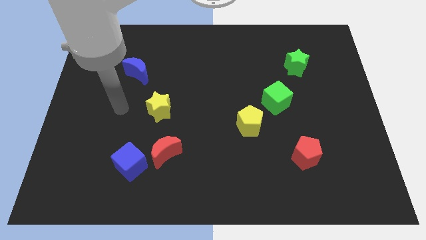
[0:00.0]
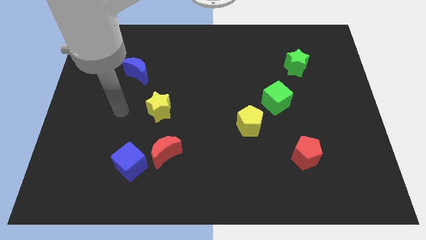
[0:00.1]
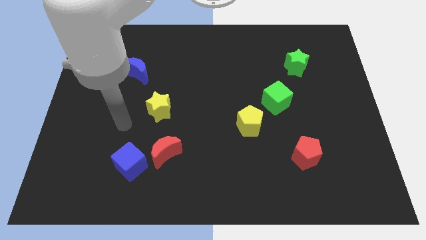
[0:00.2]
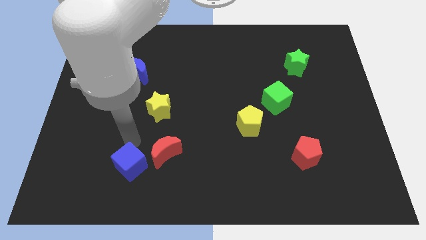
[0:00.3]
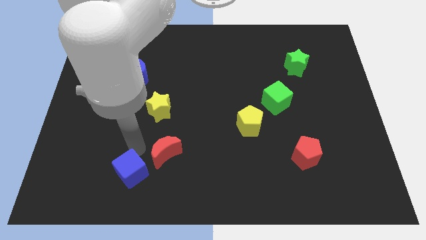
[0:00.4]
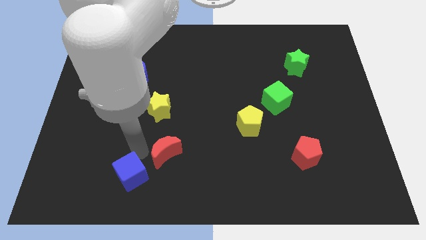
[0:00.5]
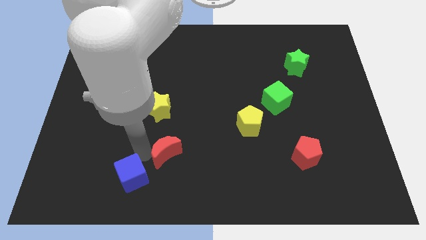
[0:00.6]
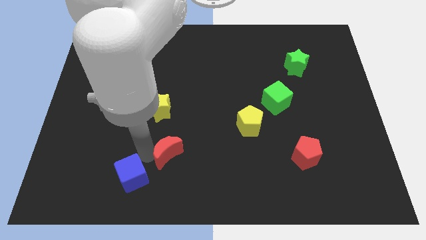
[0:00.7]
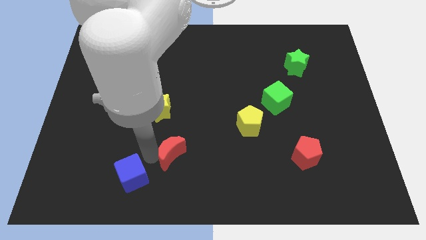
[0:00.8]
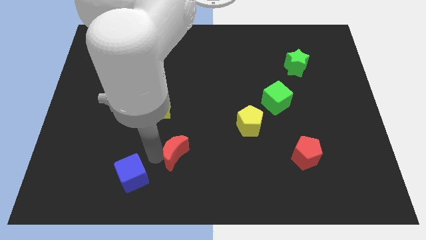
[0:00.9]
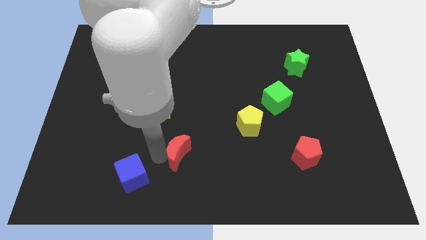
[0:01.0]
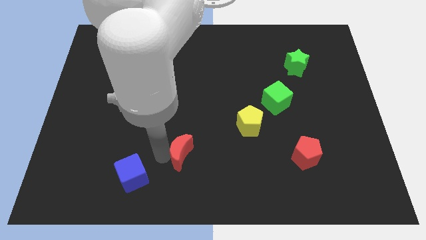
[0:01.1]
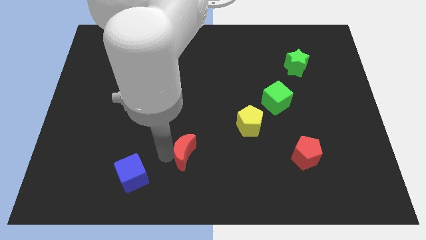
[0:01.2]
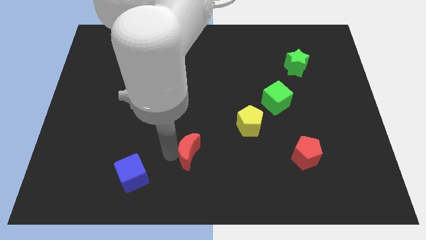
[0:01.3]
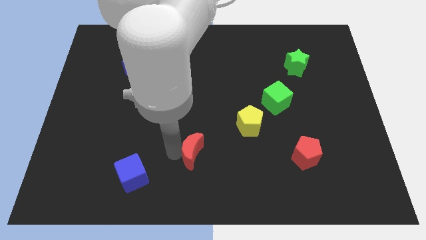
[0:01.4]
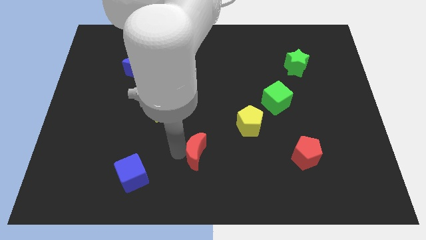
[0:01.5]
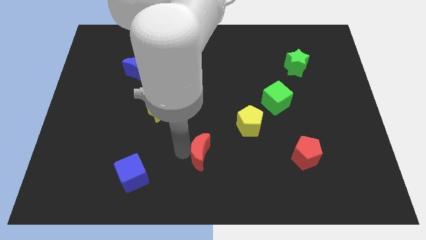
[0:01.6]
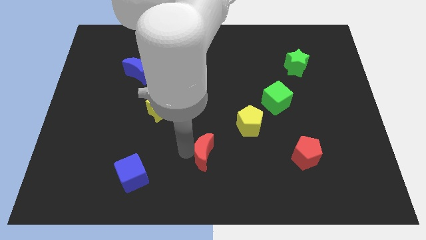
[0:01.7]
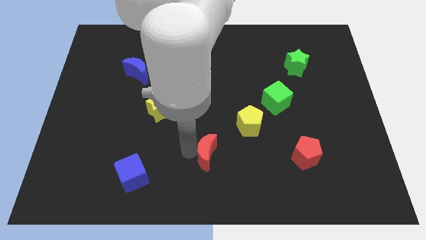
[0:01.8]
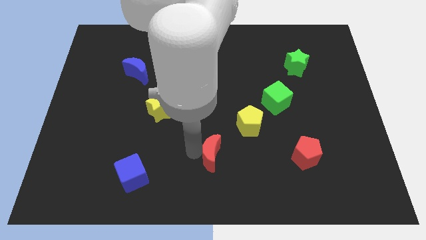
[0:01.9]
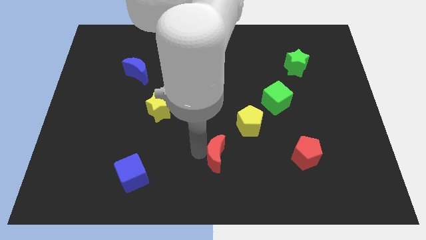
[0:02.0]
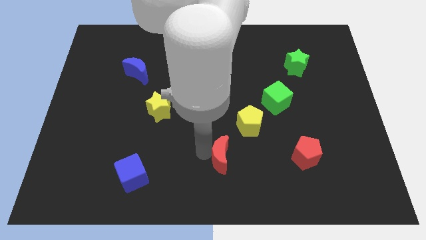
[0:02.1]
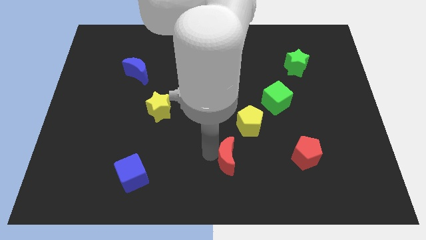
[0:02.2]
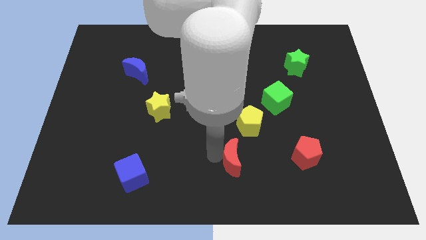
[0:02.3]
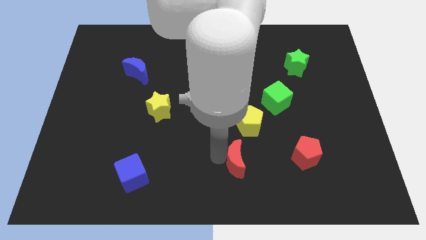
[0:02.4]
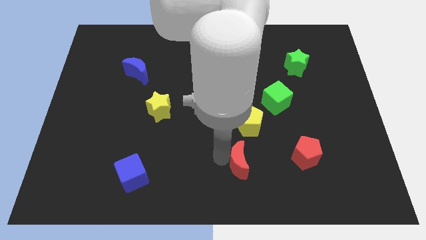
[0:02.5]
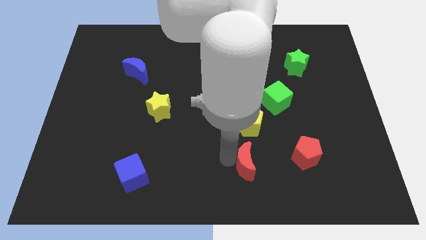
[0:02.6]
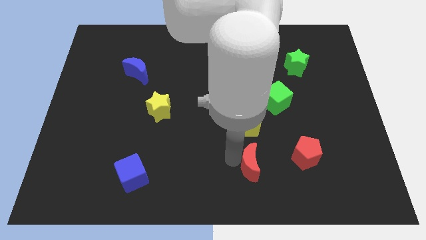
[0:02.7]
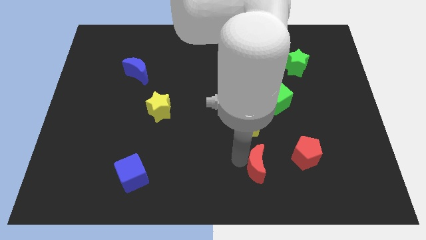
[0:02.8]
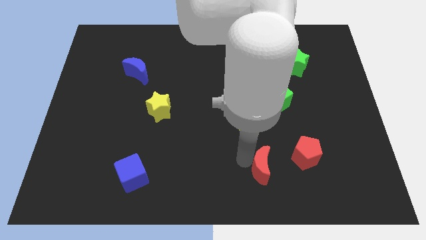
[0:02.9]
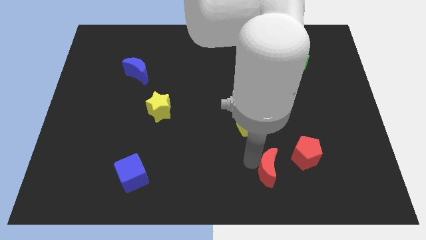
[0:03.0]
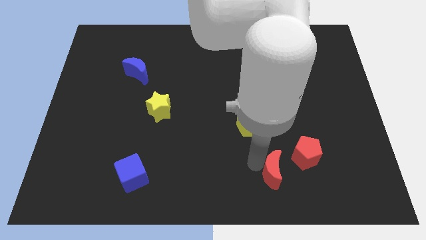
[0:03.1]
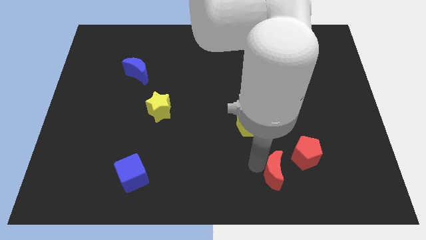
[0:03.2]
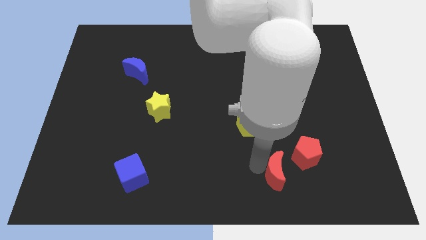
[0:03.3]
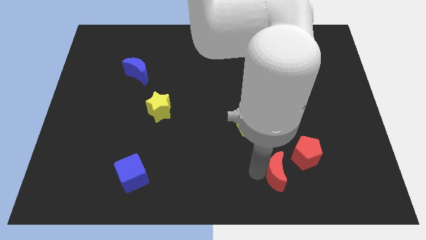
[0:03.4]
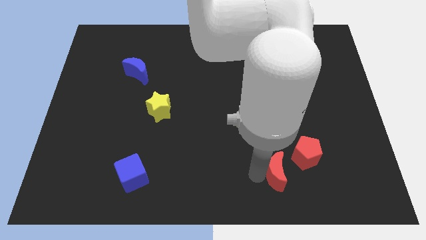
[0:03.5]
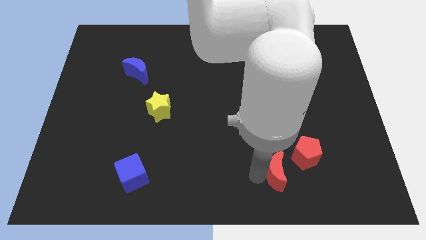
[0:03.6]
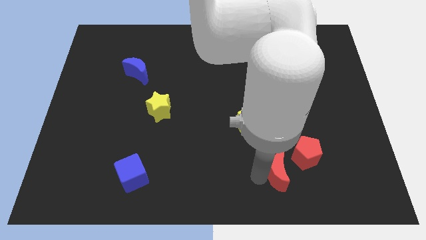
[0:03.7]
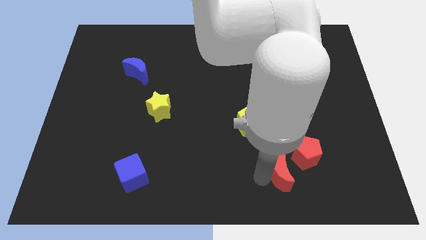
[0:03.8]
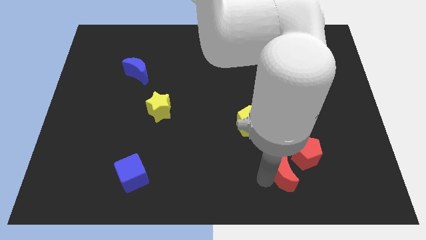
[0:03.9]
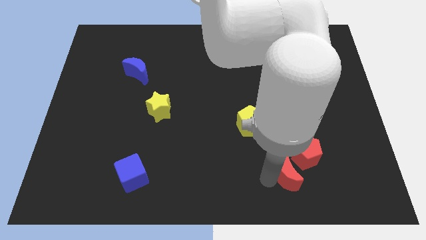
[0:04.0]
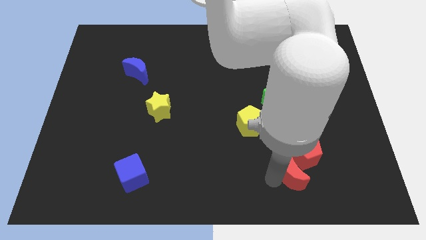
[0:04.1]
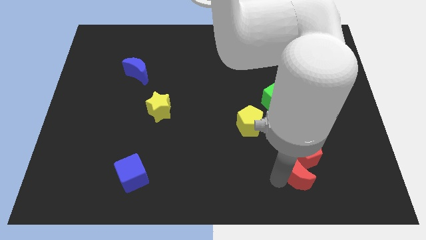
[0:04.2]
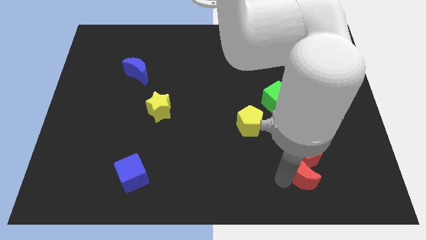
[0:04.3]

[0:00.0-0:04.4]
put the red moon towards the red pentagon

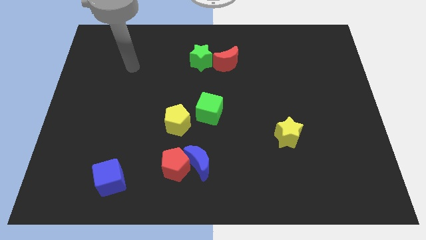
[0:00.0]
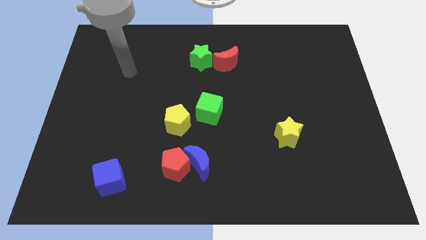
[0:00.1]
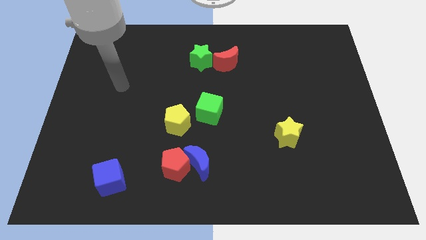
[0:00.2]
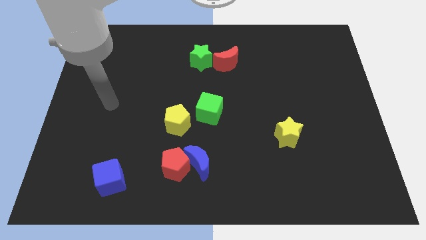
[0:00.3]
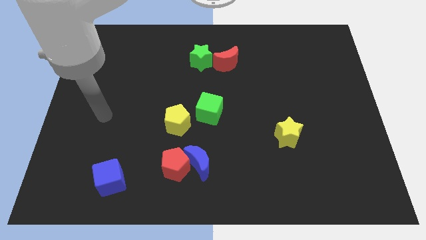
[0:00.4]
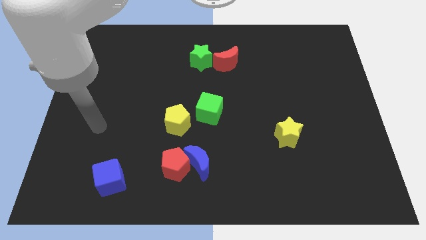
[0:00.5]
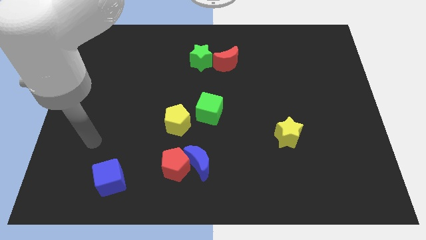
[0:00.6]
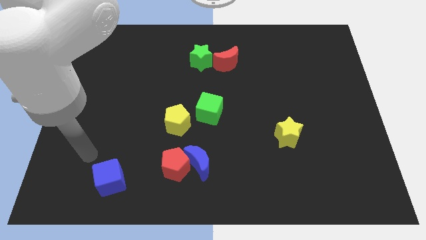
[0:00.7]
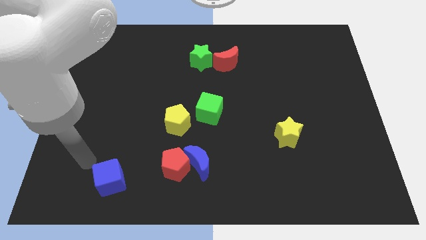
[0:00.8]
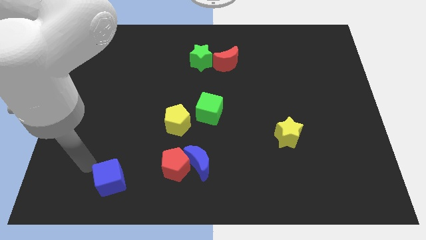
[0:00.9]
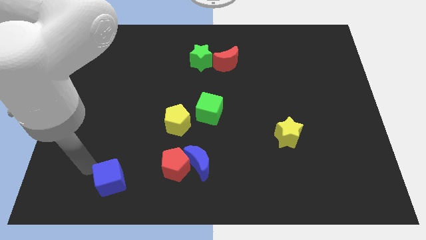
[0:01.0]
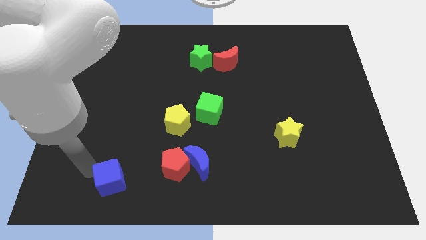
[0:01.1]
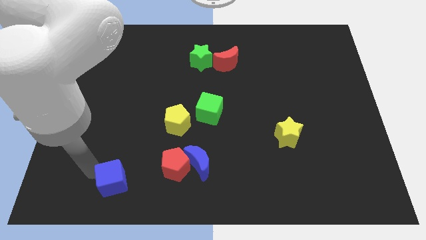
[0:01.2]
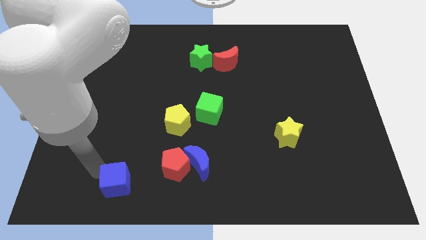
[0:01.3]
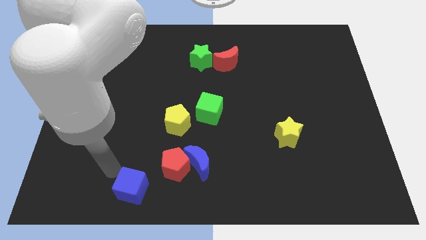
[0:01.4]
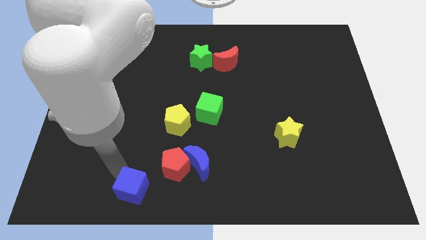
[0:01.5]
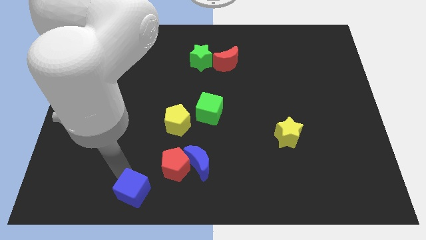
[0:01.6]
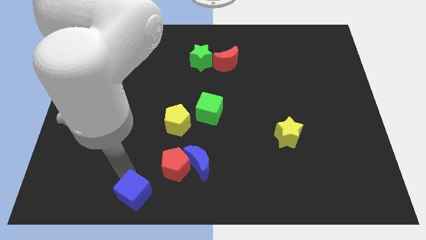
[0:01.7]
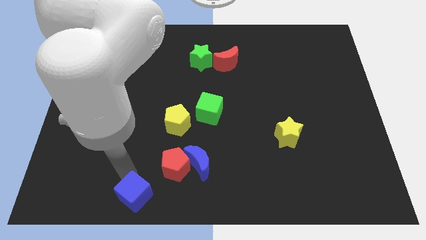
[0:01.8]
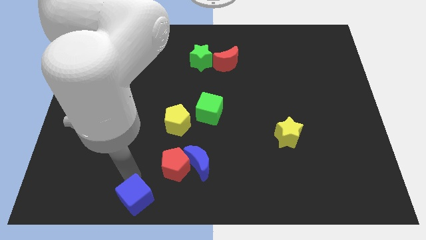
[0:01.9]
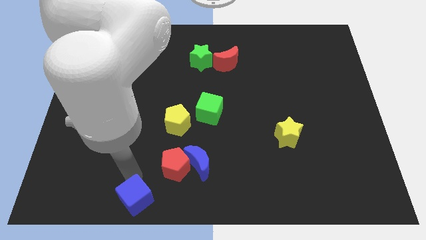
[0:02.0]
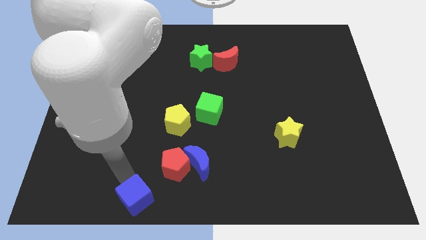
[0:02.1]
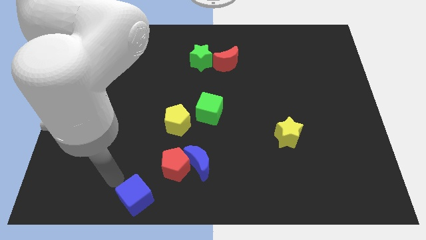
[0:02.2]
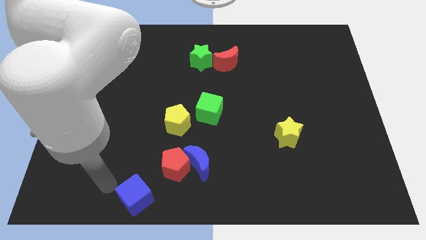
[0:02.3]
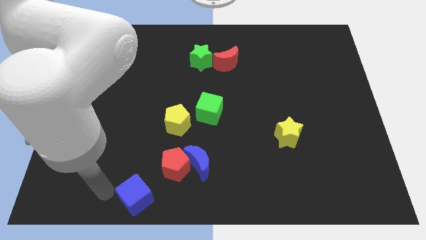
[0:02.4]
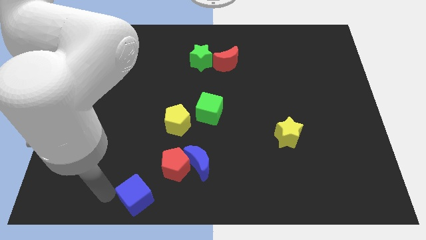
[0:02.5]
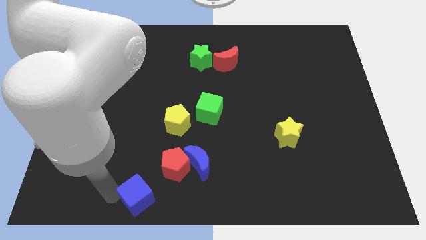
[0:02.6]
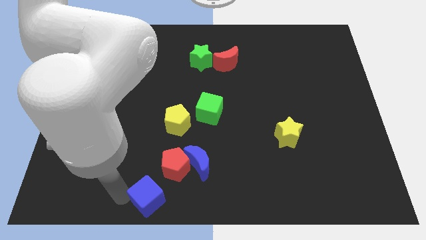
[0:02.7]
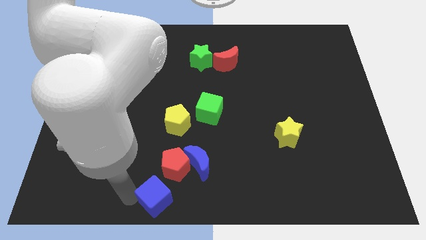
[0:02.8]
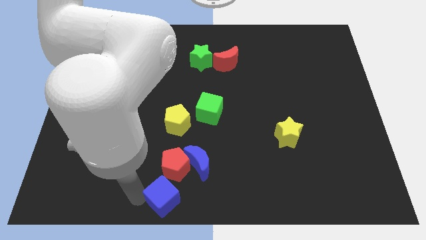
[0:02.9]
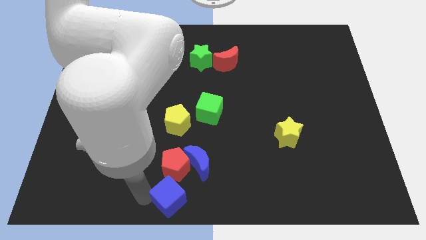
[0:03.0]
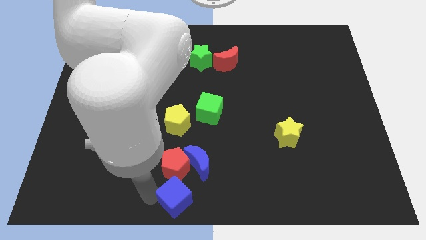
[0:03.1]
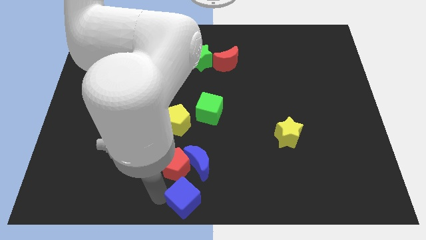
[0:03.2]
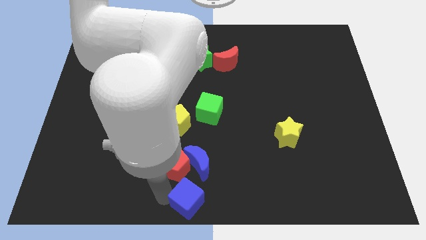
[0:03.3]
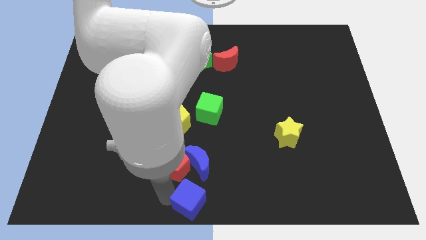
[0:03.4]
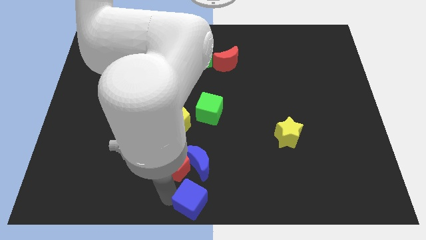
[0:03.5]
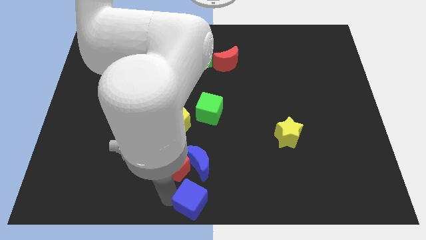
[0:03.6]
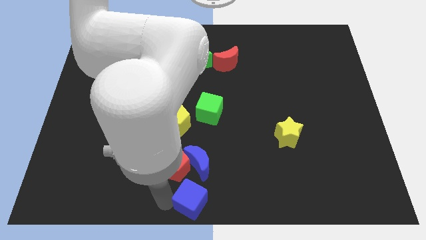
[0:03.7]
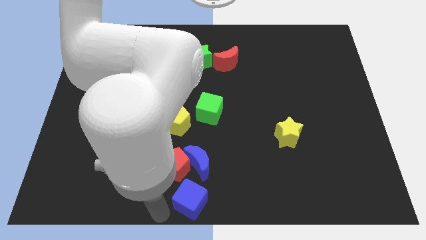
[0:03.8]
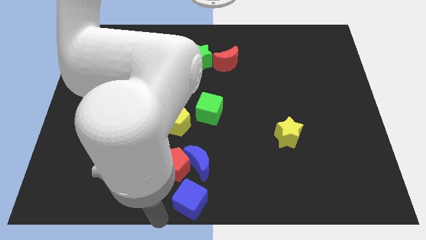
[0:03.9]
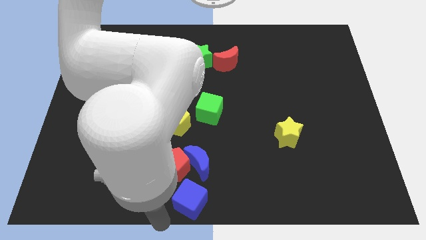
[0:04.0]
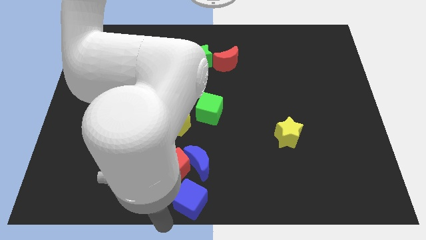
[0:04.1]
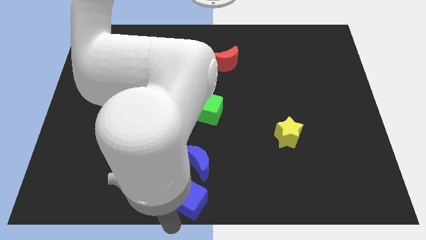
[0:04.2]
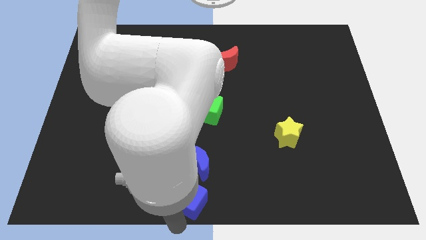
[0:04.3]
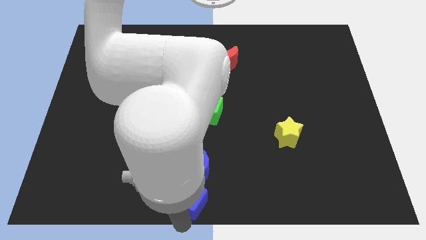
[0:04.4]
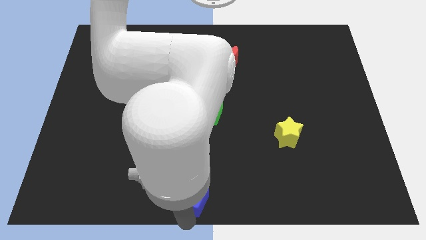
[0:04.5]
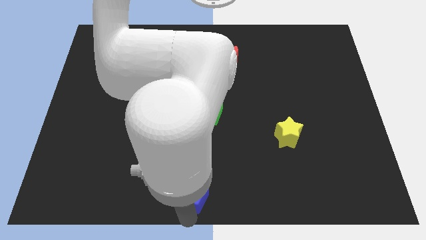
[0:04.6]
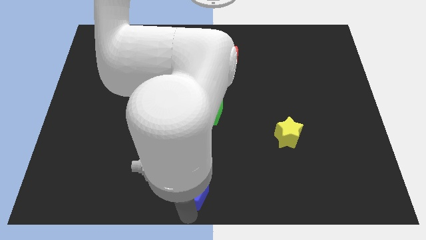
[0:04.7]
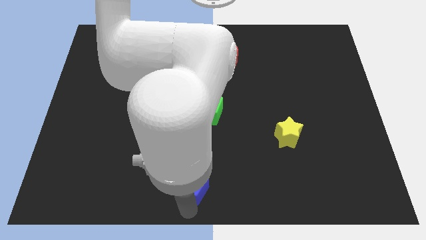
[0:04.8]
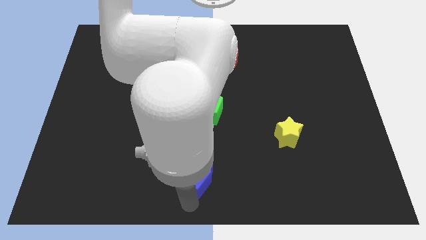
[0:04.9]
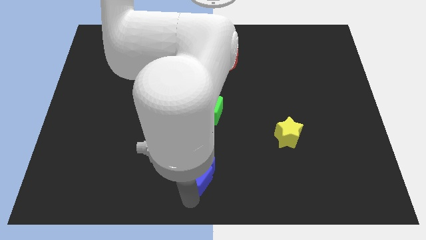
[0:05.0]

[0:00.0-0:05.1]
push the blue cube to the blue moon
